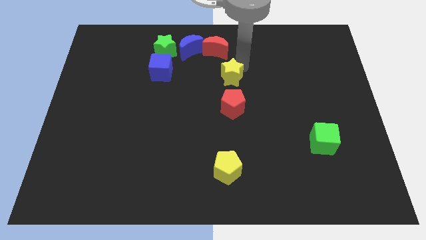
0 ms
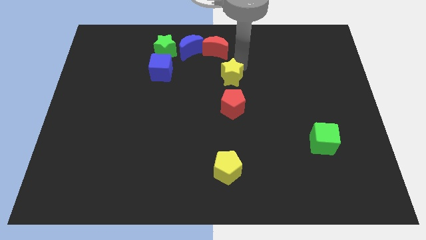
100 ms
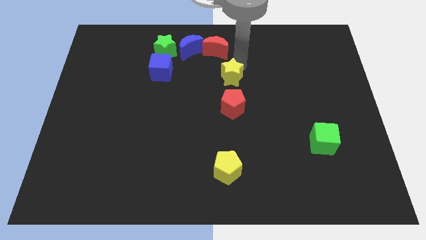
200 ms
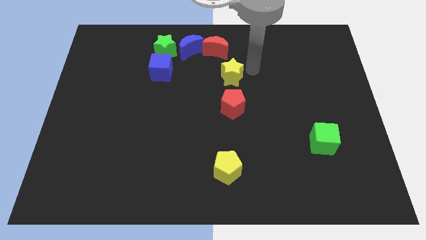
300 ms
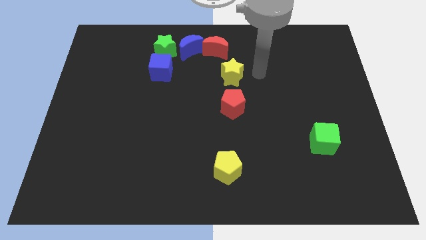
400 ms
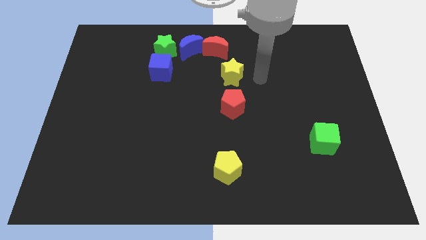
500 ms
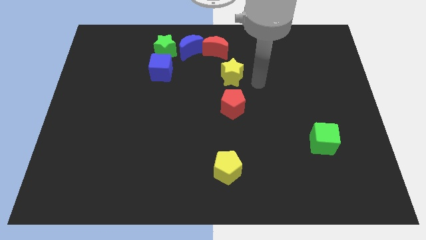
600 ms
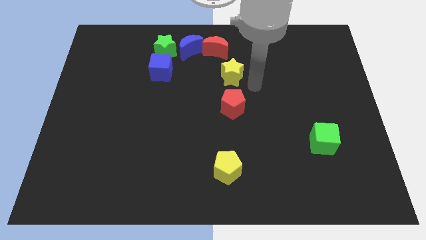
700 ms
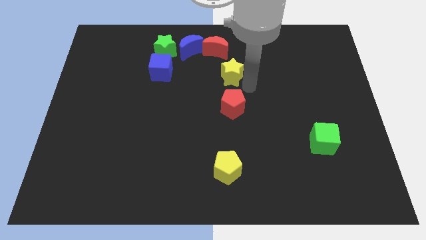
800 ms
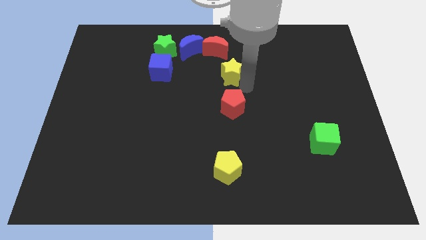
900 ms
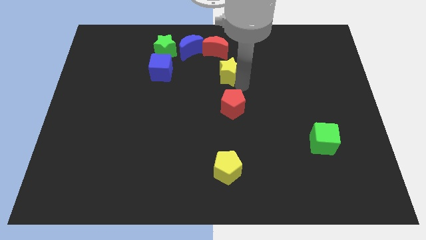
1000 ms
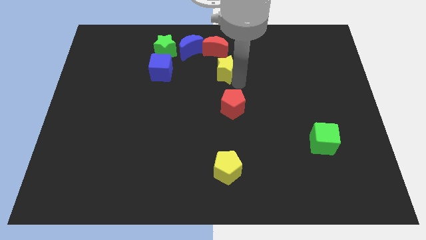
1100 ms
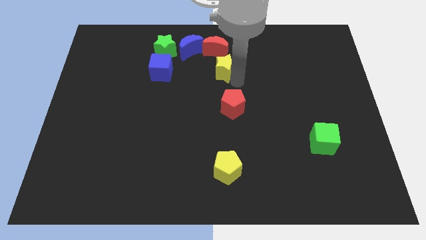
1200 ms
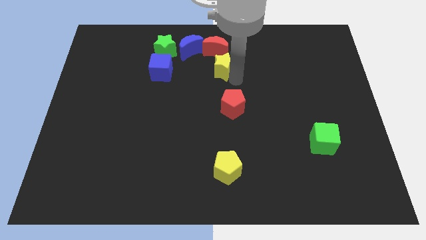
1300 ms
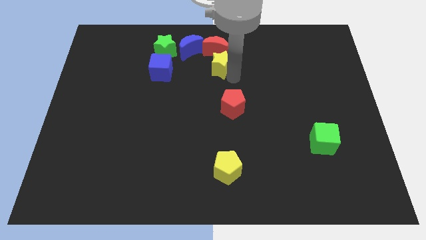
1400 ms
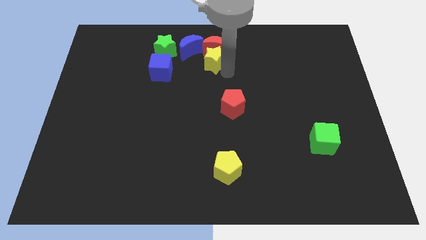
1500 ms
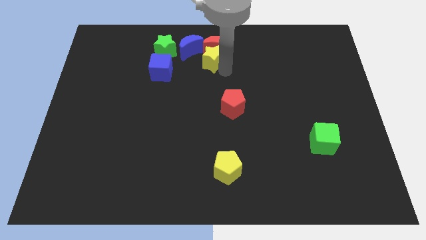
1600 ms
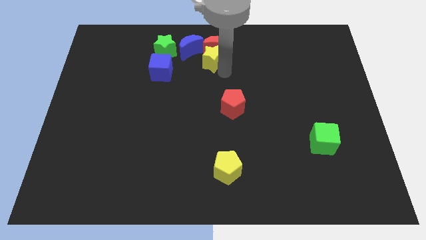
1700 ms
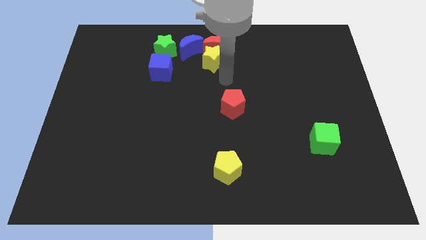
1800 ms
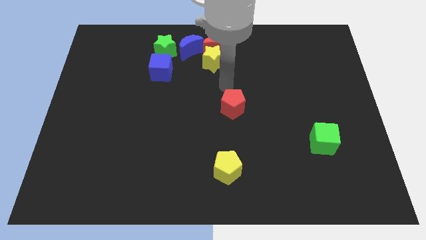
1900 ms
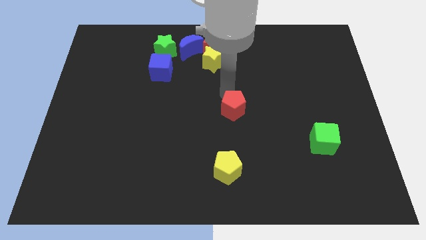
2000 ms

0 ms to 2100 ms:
place the yellow star below the red crescent

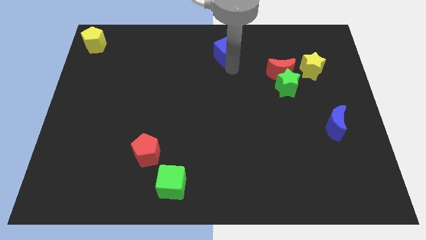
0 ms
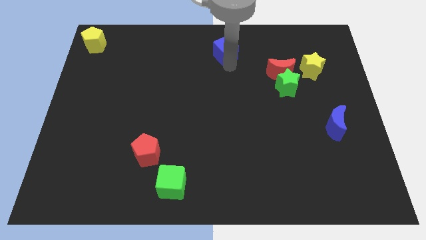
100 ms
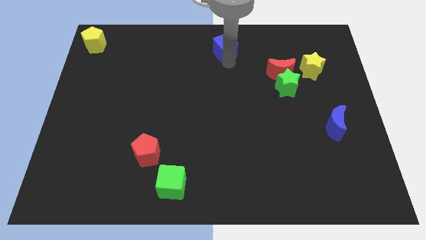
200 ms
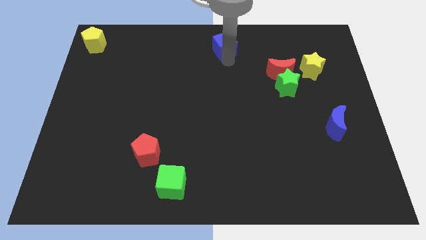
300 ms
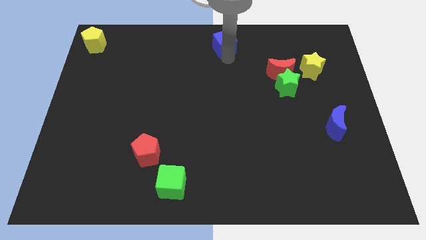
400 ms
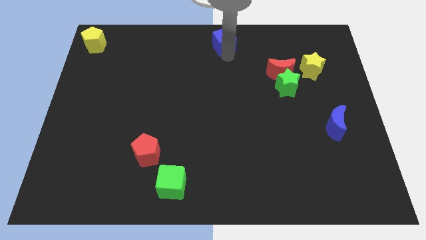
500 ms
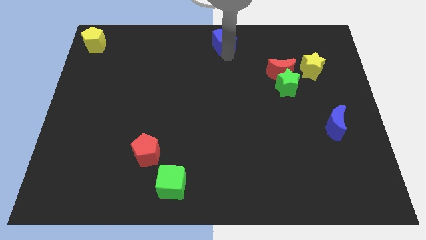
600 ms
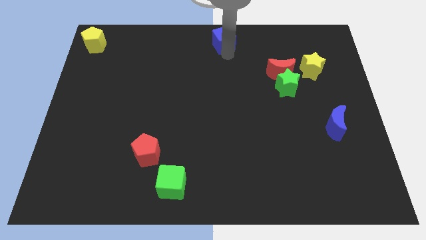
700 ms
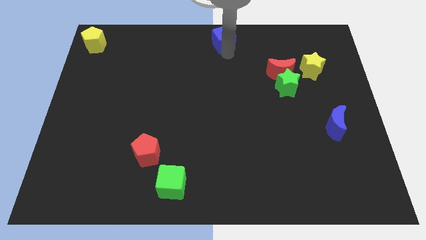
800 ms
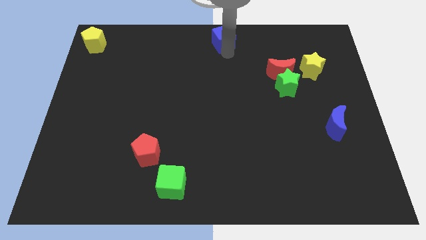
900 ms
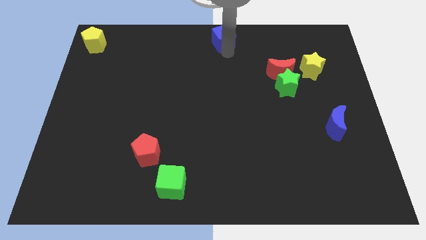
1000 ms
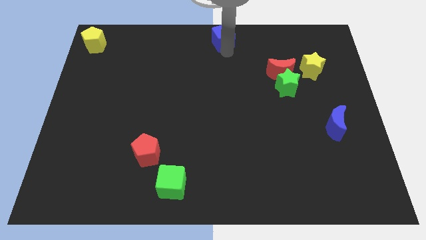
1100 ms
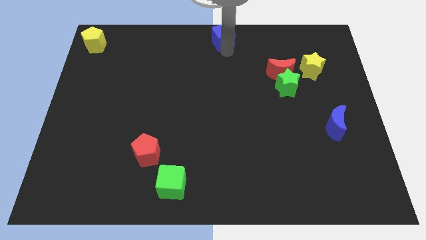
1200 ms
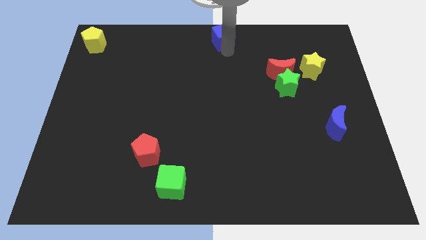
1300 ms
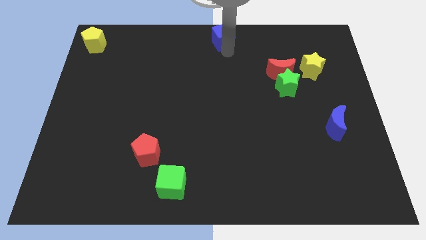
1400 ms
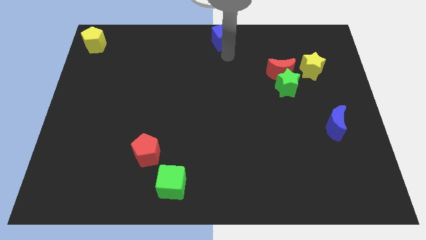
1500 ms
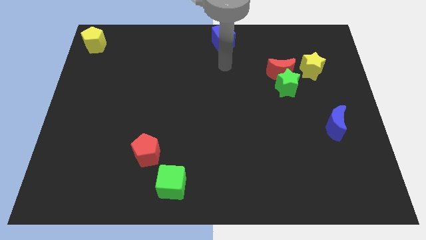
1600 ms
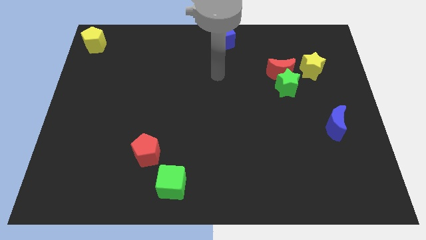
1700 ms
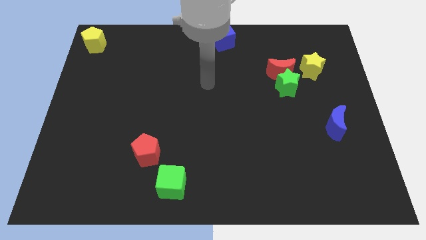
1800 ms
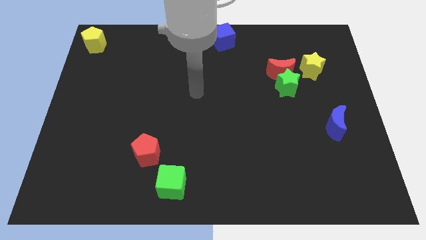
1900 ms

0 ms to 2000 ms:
move the blue cube to the top center of the board

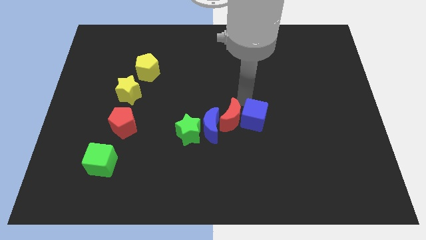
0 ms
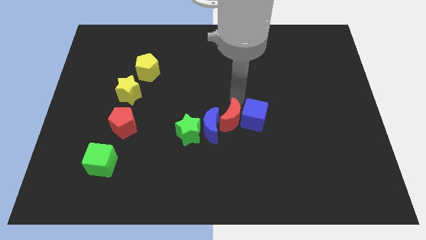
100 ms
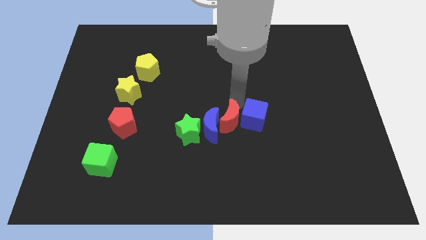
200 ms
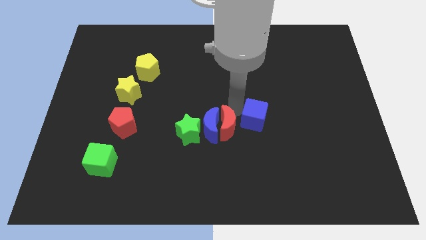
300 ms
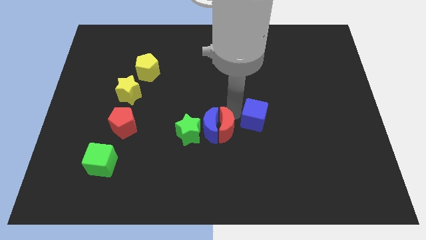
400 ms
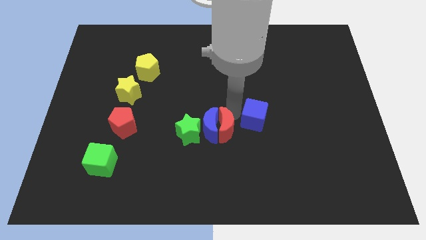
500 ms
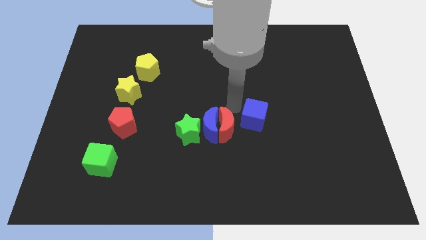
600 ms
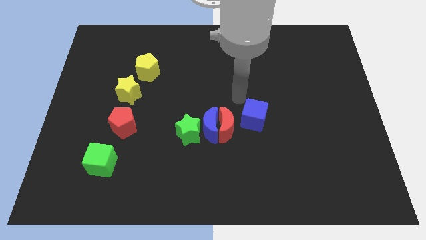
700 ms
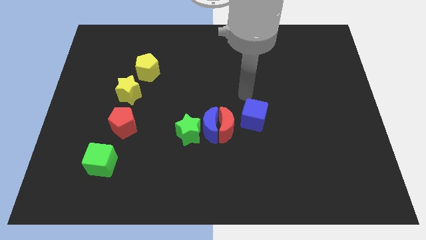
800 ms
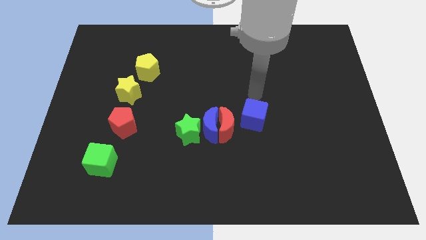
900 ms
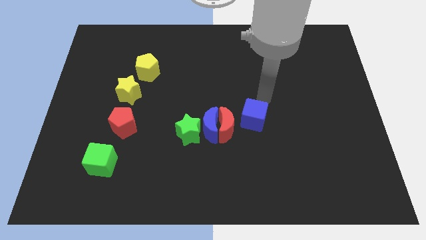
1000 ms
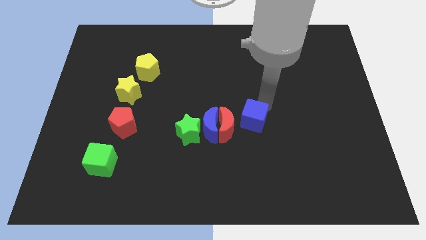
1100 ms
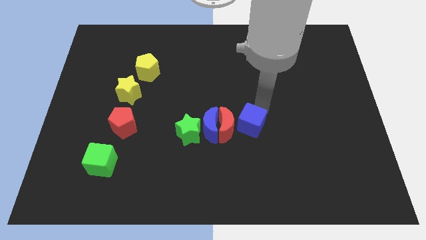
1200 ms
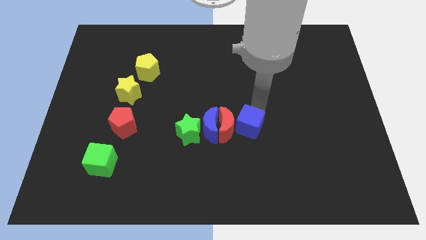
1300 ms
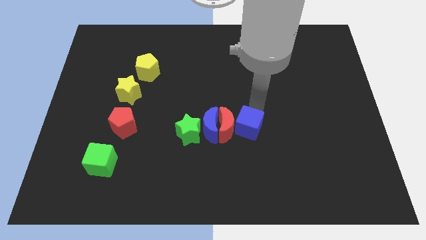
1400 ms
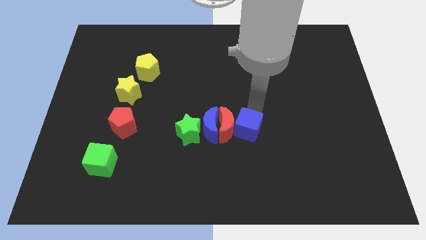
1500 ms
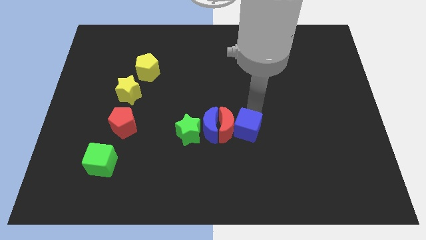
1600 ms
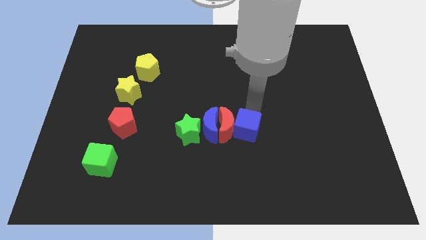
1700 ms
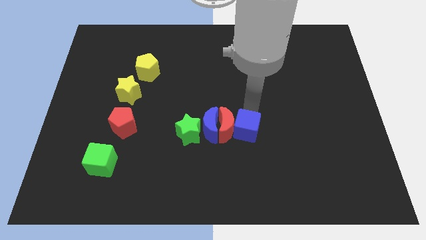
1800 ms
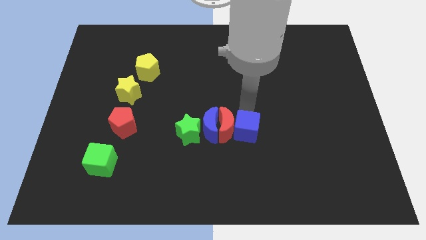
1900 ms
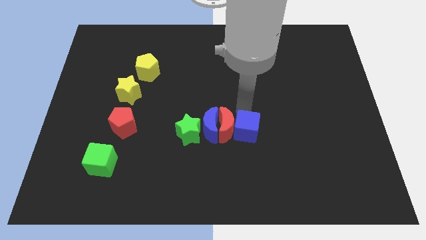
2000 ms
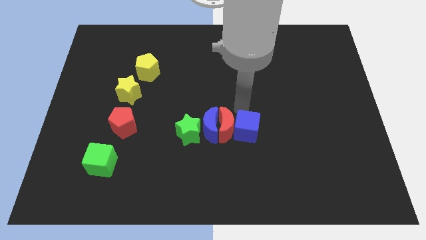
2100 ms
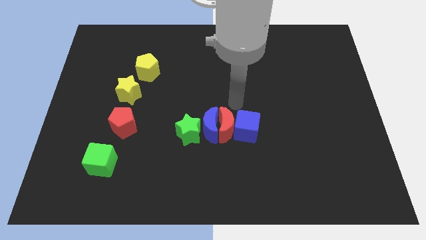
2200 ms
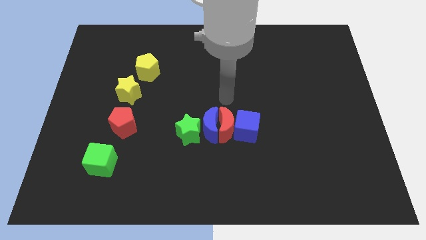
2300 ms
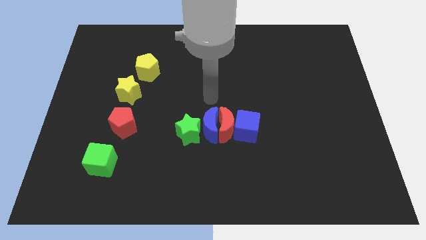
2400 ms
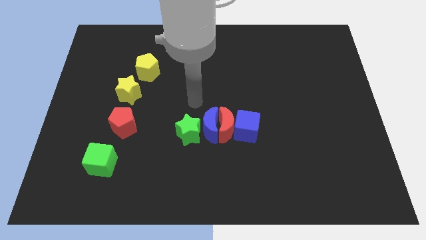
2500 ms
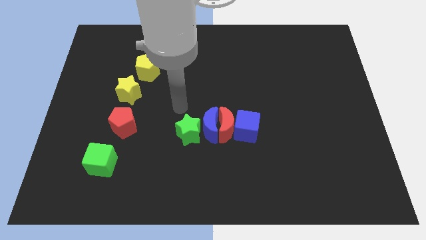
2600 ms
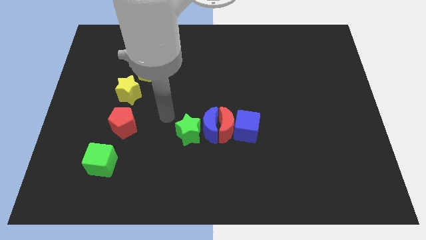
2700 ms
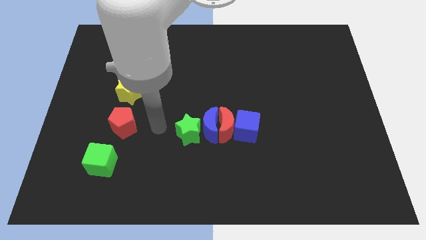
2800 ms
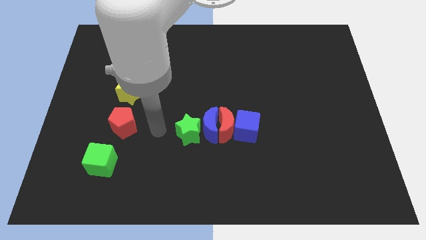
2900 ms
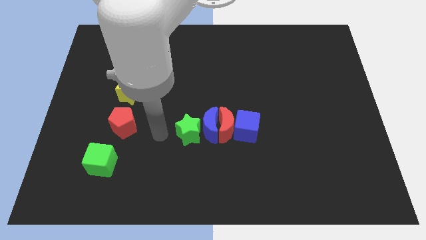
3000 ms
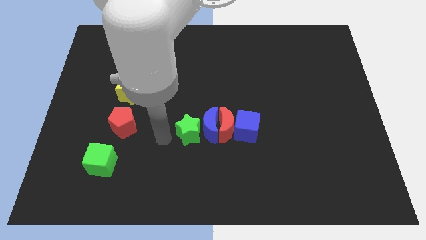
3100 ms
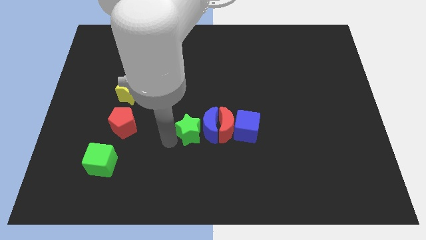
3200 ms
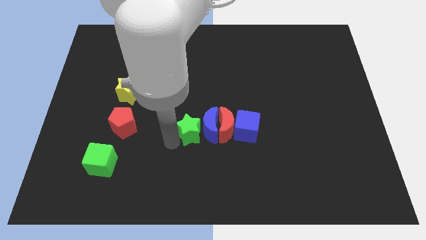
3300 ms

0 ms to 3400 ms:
adjust the red moon and blue cube to form a horizontal line

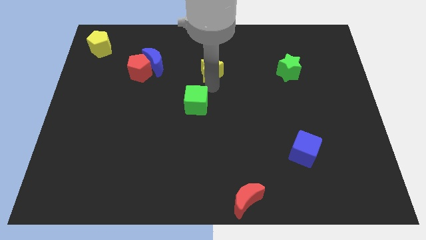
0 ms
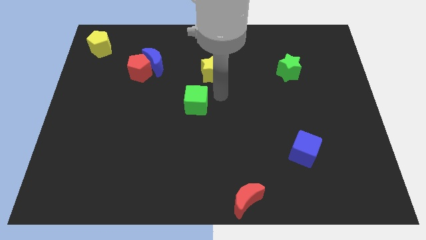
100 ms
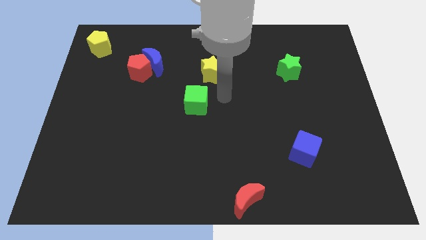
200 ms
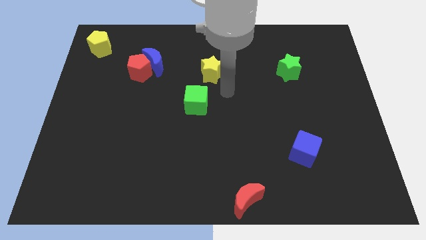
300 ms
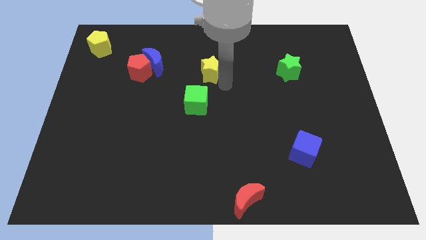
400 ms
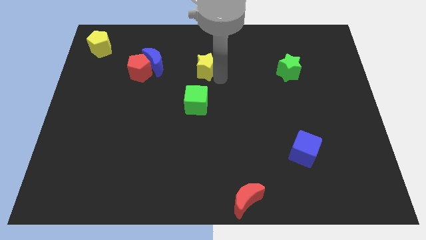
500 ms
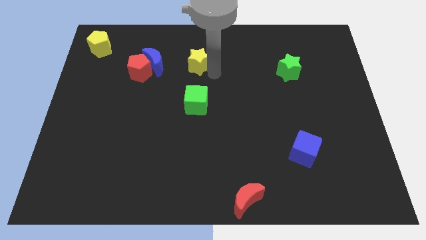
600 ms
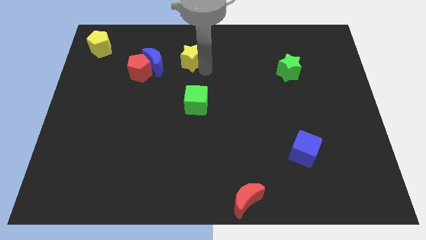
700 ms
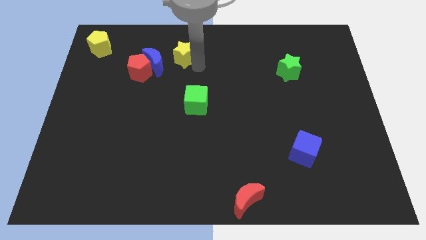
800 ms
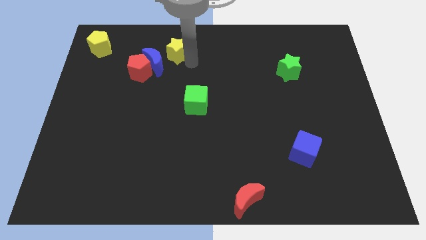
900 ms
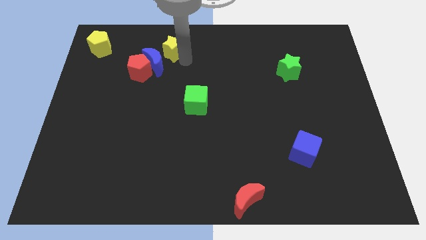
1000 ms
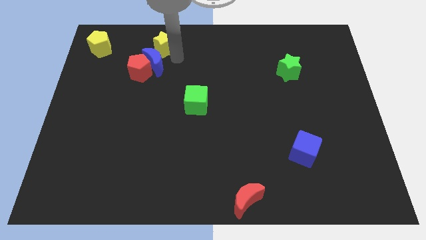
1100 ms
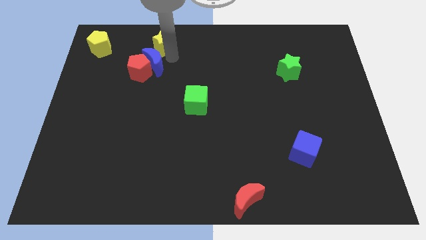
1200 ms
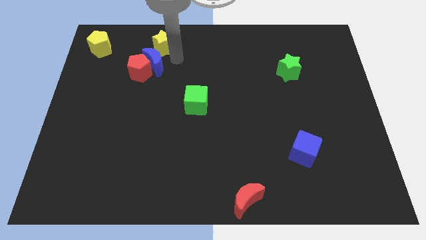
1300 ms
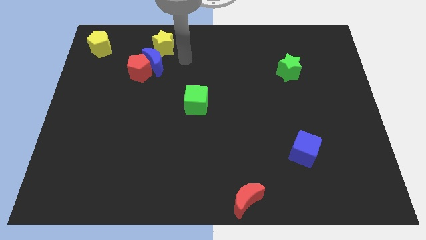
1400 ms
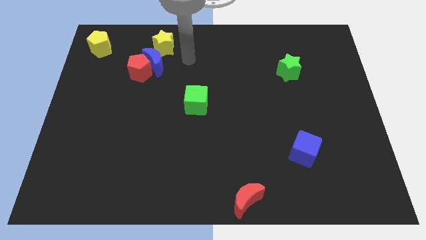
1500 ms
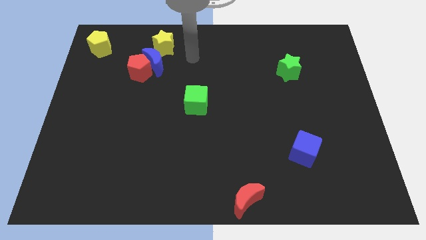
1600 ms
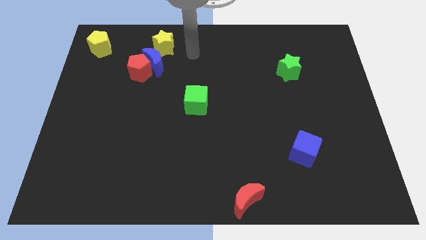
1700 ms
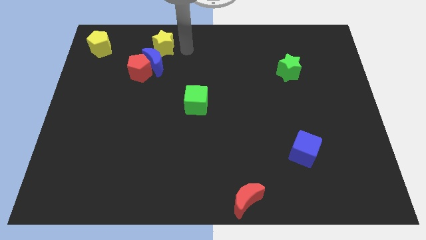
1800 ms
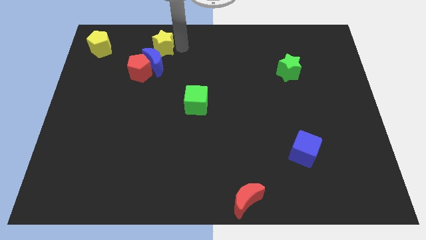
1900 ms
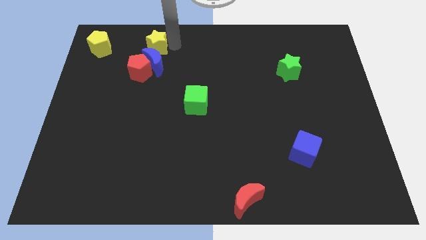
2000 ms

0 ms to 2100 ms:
put yellow star above the blue moon
